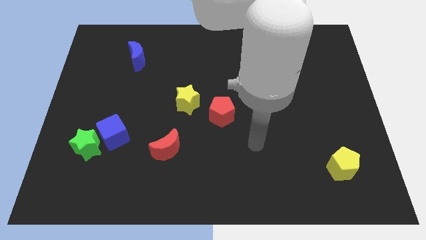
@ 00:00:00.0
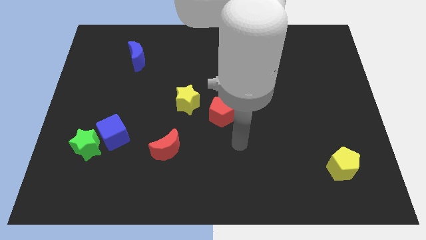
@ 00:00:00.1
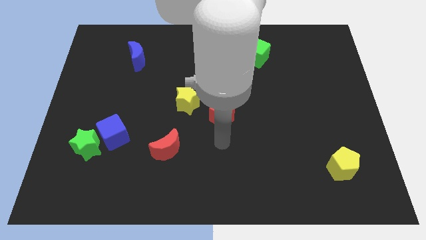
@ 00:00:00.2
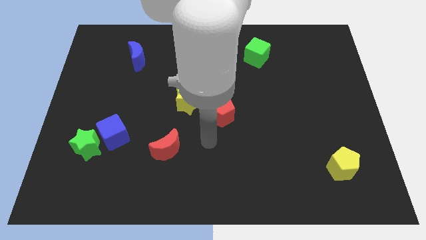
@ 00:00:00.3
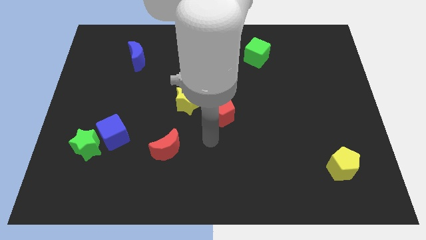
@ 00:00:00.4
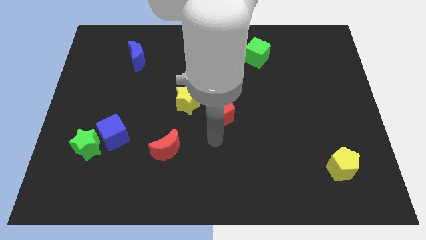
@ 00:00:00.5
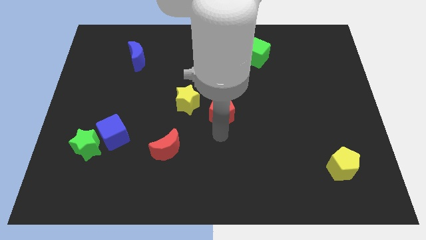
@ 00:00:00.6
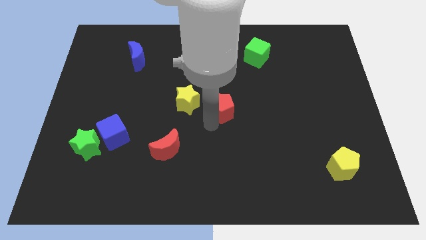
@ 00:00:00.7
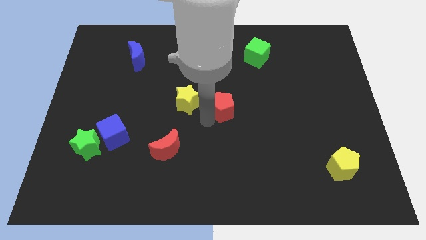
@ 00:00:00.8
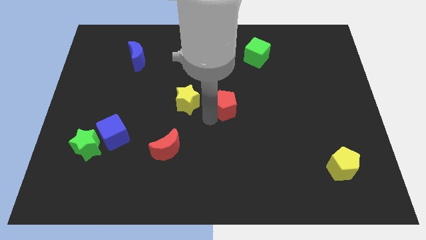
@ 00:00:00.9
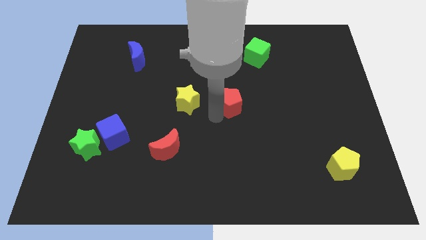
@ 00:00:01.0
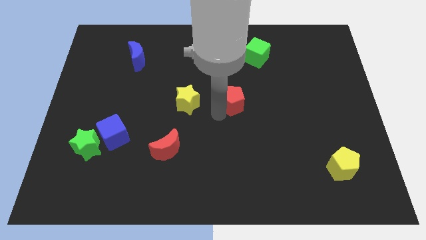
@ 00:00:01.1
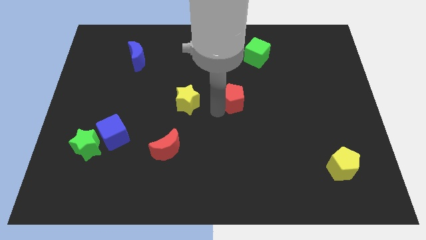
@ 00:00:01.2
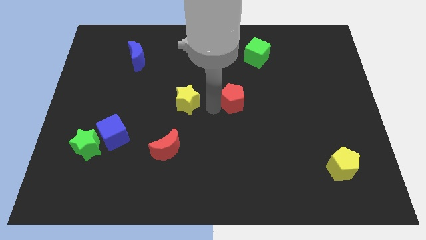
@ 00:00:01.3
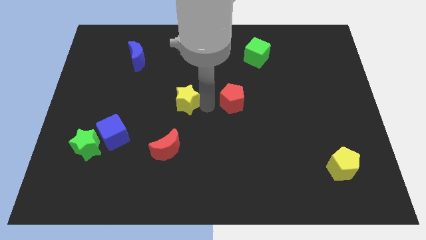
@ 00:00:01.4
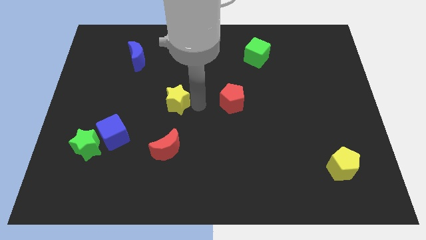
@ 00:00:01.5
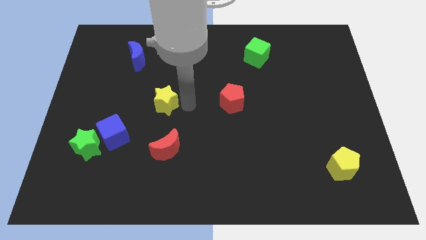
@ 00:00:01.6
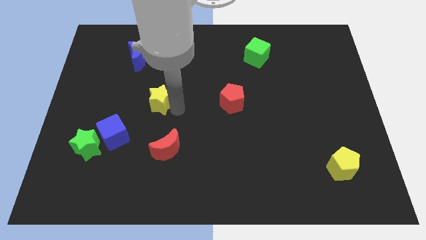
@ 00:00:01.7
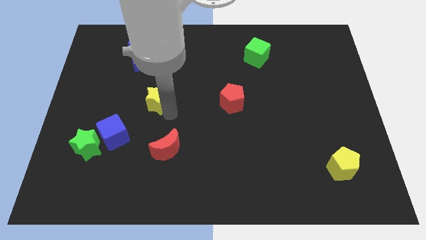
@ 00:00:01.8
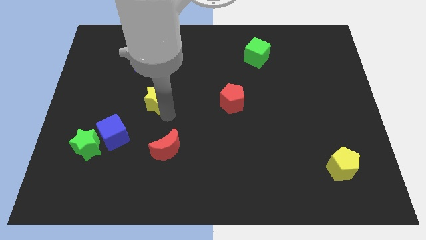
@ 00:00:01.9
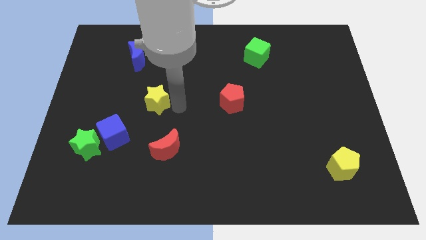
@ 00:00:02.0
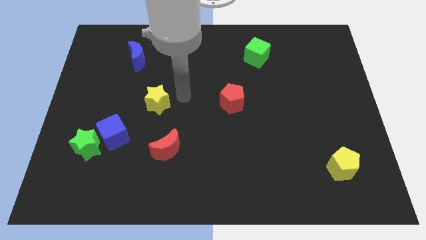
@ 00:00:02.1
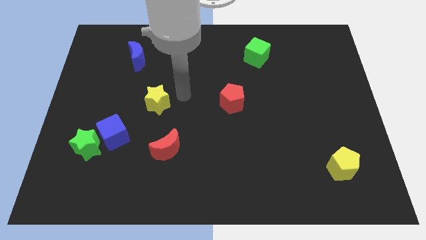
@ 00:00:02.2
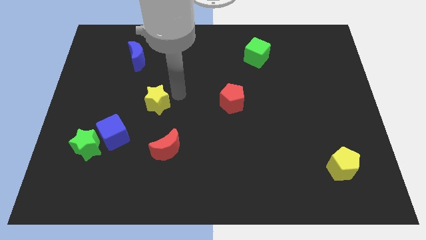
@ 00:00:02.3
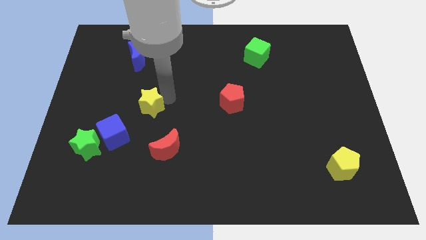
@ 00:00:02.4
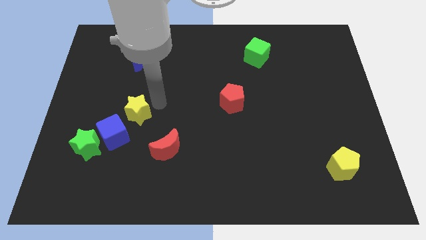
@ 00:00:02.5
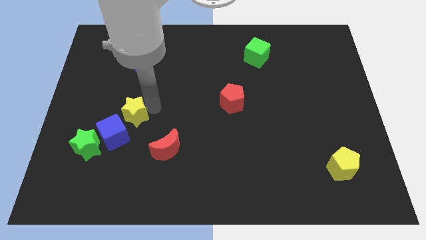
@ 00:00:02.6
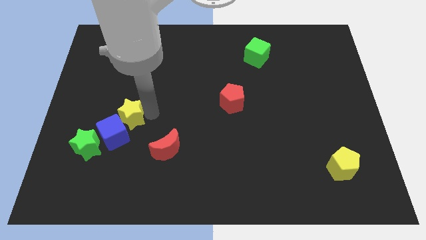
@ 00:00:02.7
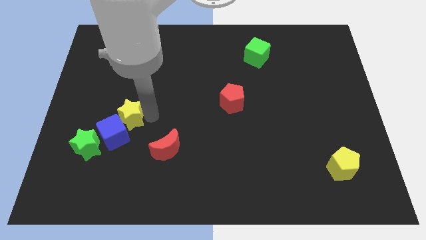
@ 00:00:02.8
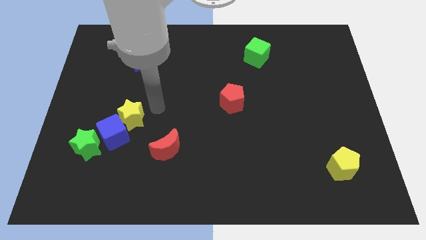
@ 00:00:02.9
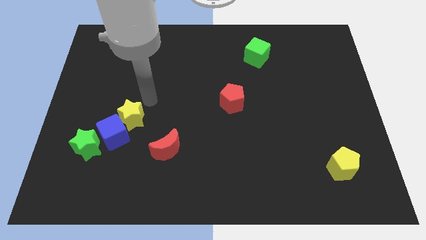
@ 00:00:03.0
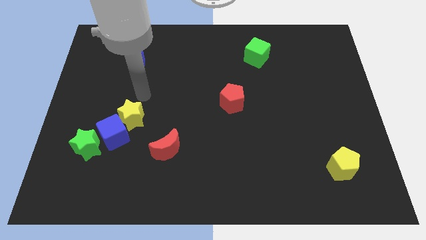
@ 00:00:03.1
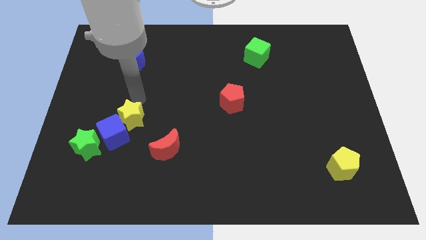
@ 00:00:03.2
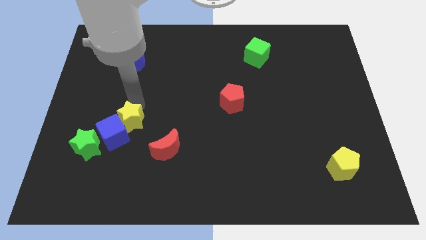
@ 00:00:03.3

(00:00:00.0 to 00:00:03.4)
slide the yellow star into the blue cube

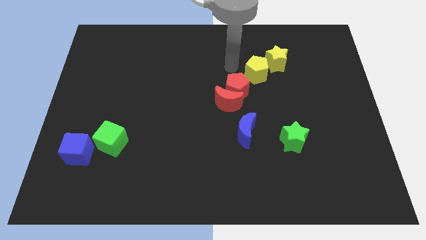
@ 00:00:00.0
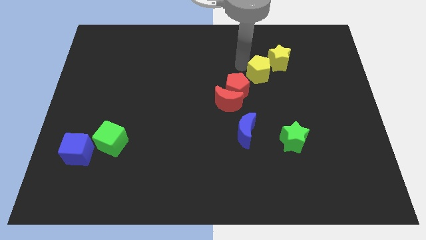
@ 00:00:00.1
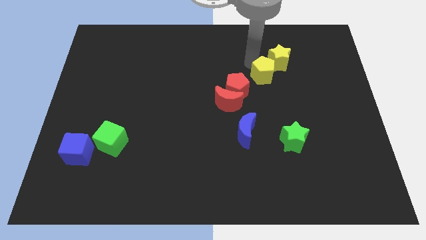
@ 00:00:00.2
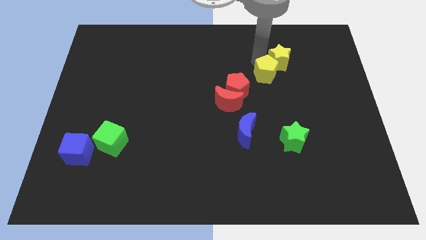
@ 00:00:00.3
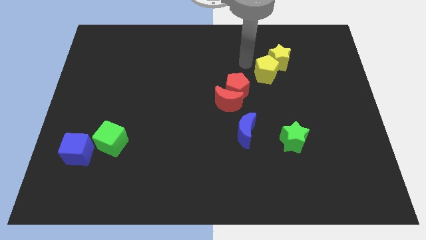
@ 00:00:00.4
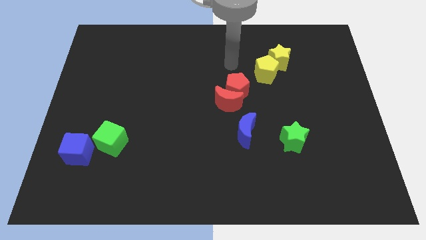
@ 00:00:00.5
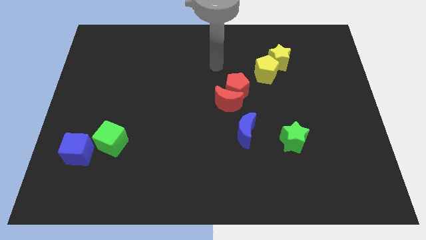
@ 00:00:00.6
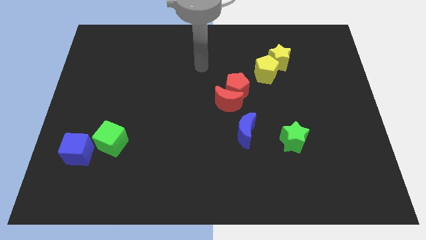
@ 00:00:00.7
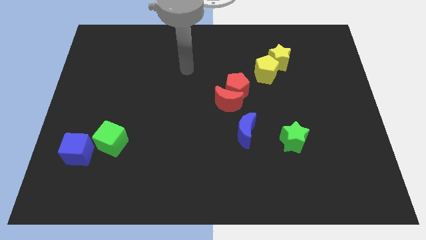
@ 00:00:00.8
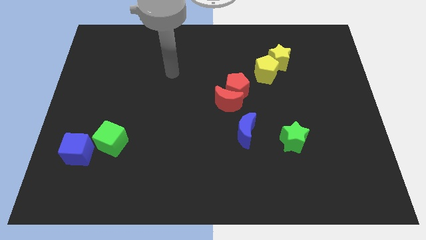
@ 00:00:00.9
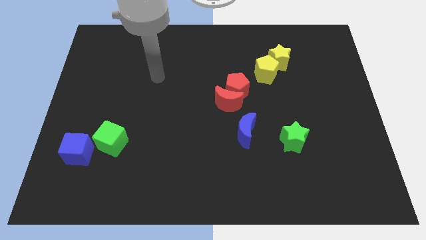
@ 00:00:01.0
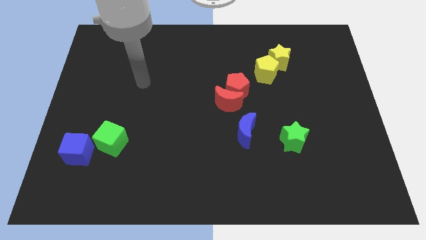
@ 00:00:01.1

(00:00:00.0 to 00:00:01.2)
separate yellow blocks from the red blocks

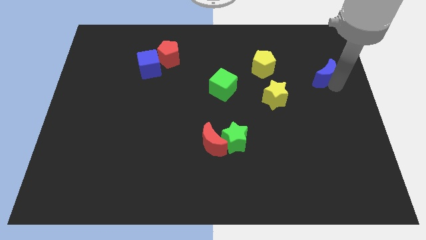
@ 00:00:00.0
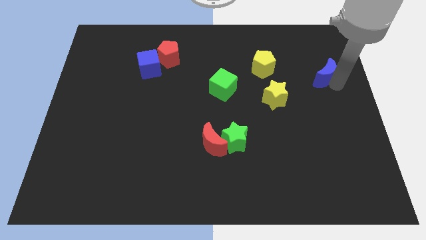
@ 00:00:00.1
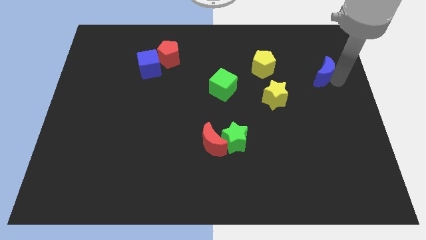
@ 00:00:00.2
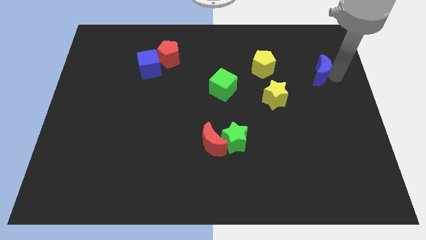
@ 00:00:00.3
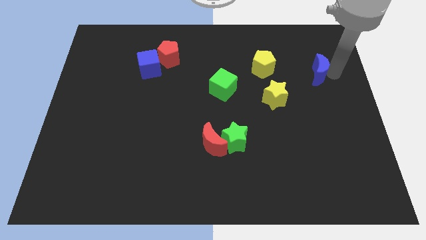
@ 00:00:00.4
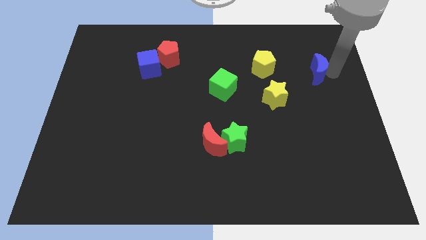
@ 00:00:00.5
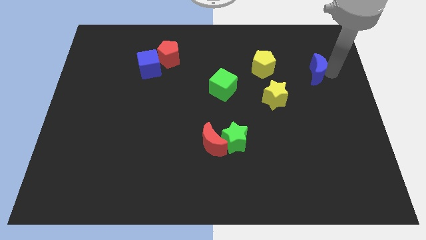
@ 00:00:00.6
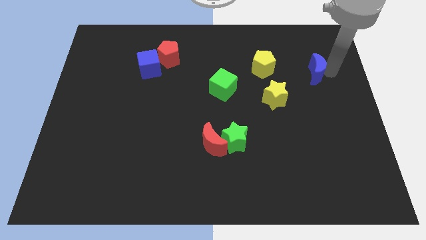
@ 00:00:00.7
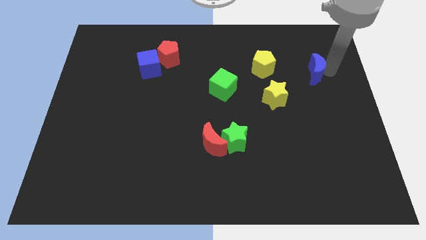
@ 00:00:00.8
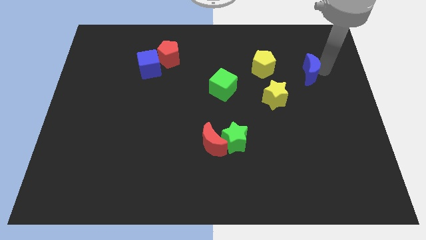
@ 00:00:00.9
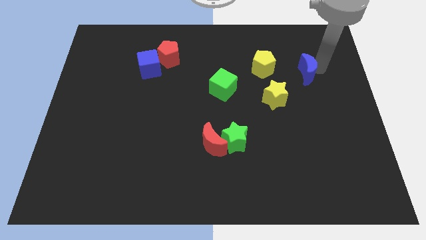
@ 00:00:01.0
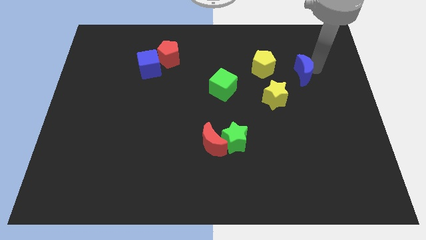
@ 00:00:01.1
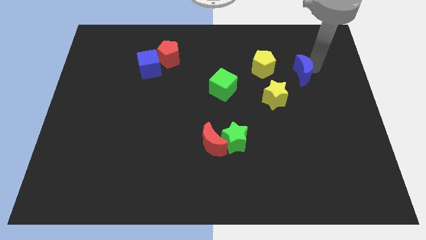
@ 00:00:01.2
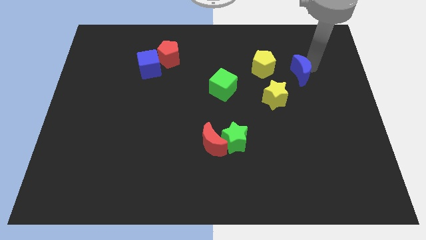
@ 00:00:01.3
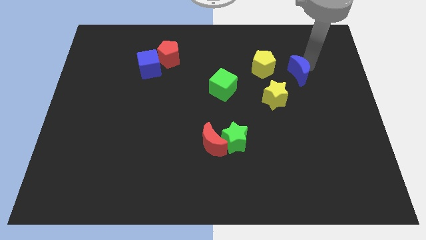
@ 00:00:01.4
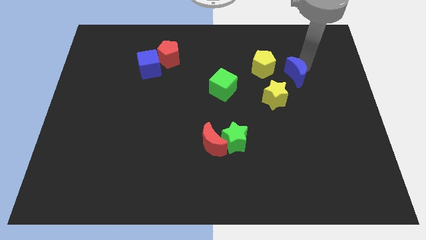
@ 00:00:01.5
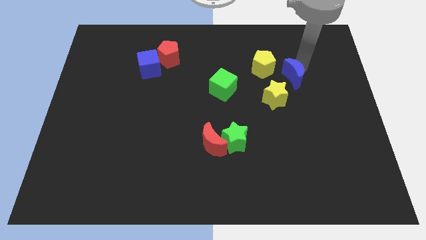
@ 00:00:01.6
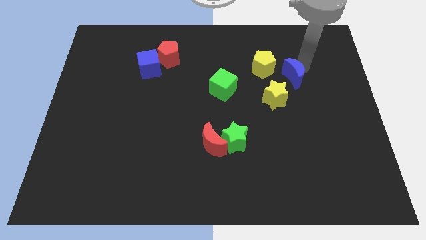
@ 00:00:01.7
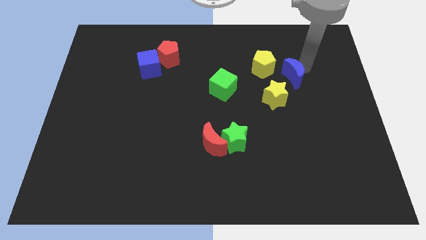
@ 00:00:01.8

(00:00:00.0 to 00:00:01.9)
place the blue crescent to the right of the yellow pentagon and the yellow star

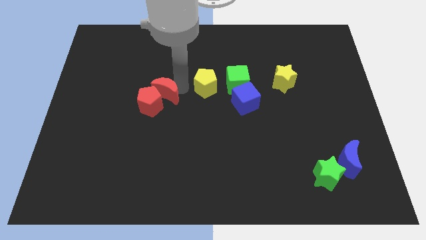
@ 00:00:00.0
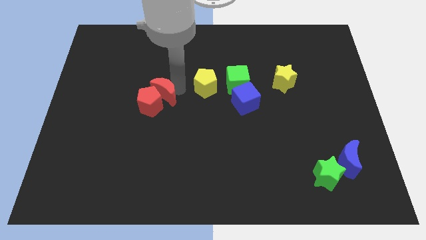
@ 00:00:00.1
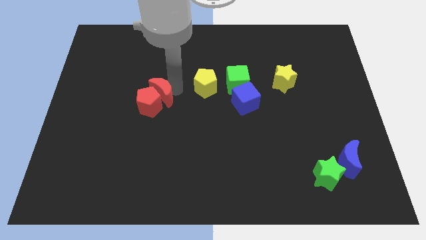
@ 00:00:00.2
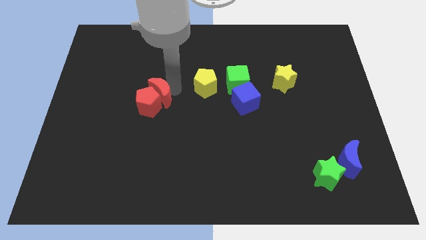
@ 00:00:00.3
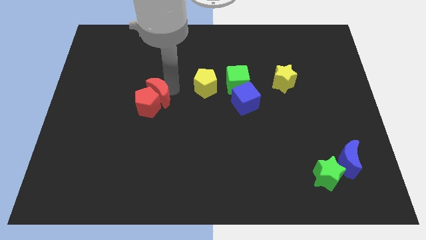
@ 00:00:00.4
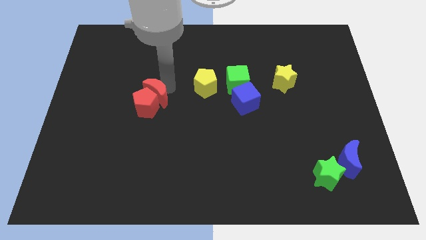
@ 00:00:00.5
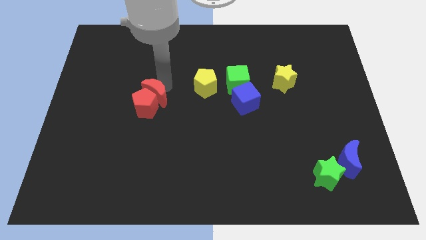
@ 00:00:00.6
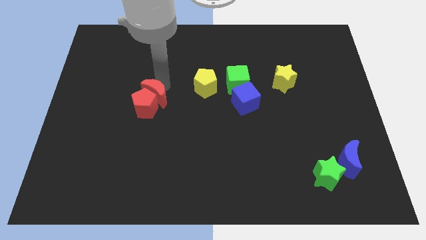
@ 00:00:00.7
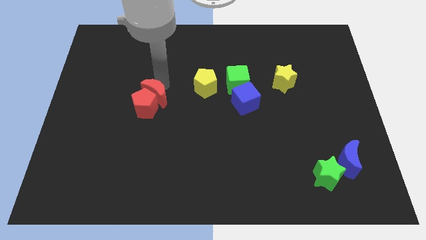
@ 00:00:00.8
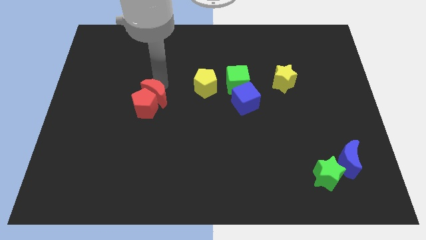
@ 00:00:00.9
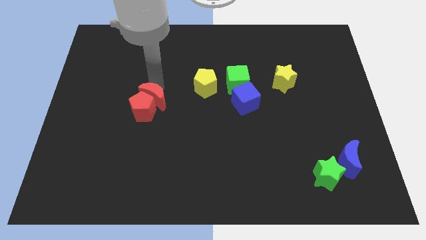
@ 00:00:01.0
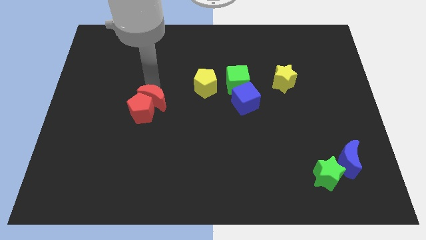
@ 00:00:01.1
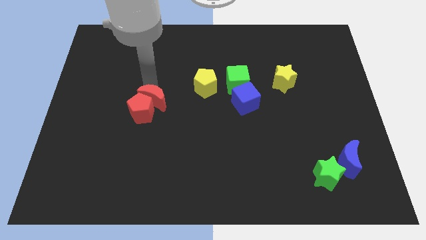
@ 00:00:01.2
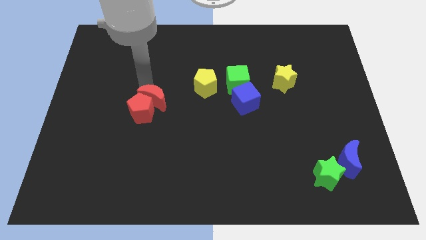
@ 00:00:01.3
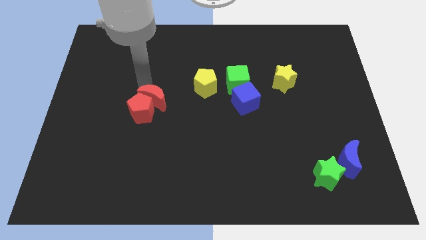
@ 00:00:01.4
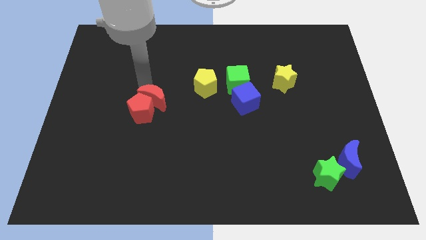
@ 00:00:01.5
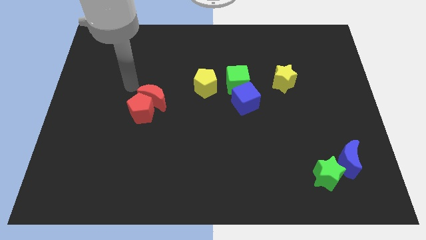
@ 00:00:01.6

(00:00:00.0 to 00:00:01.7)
push the red crescent into the red pentagon

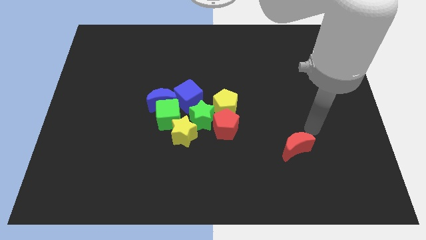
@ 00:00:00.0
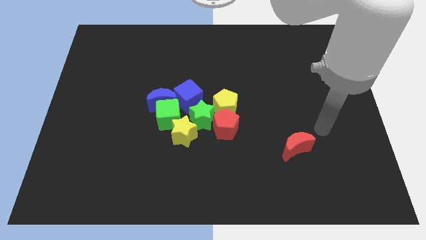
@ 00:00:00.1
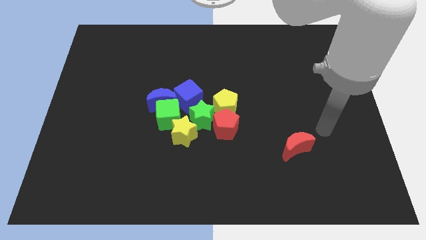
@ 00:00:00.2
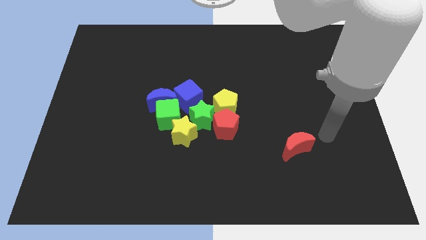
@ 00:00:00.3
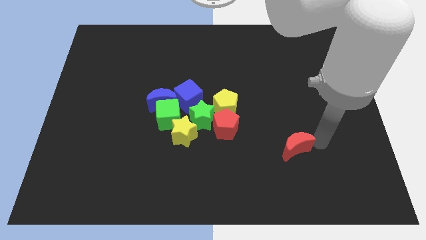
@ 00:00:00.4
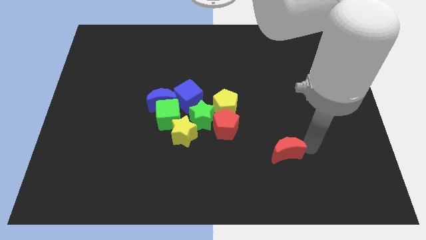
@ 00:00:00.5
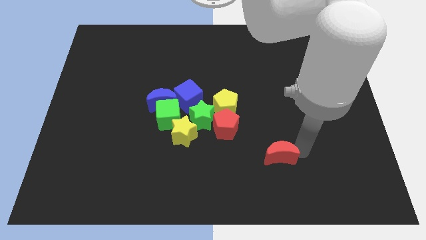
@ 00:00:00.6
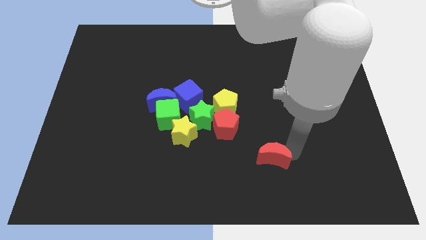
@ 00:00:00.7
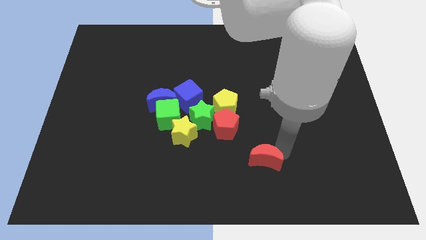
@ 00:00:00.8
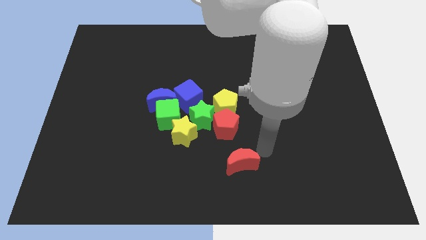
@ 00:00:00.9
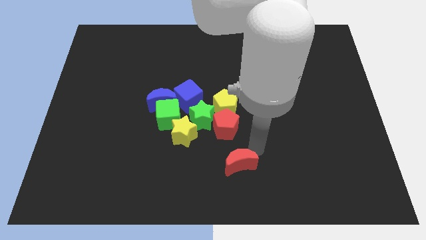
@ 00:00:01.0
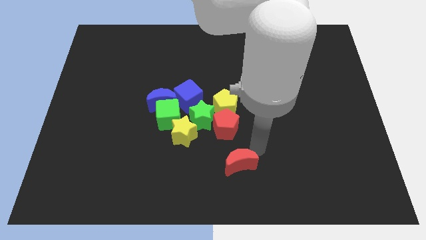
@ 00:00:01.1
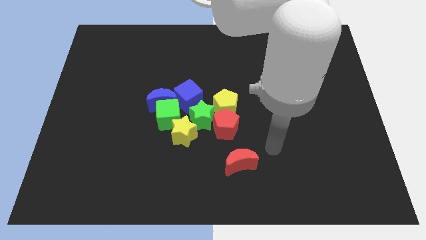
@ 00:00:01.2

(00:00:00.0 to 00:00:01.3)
push red crescent below the red pentagon
